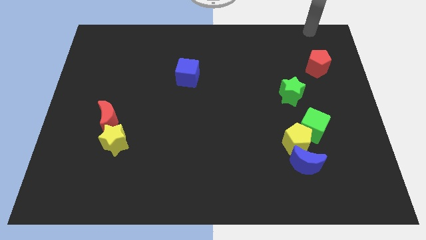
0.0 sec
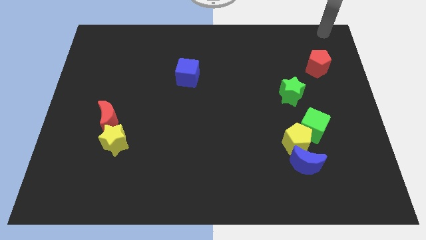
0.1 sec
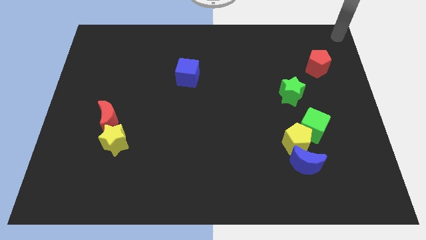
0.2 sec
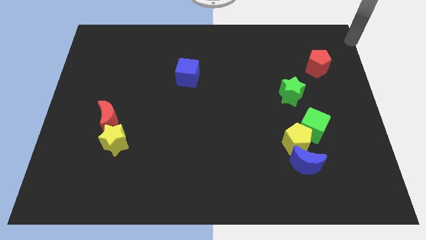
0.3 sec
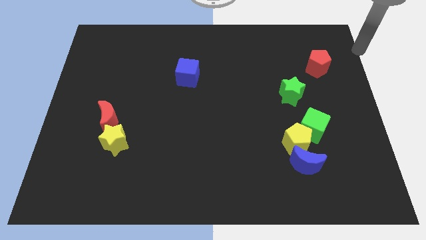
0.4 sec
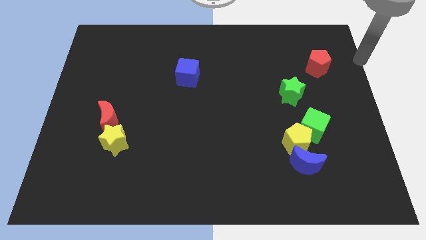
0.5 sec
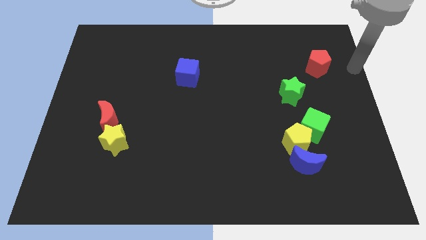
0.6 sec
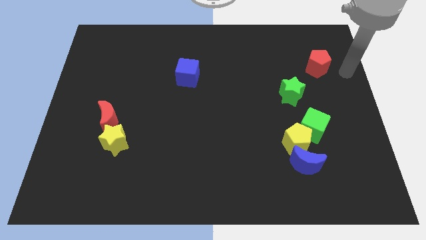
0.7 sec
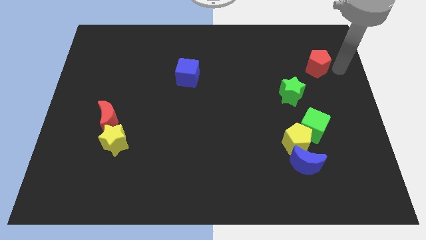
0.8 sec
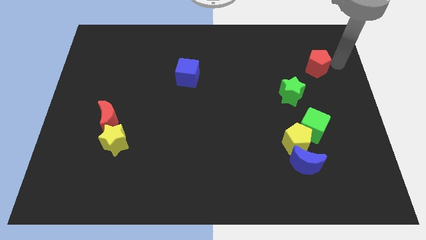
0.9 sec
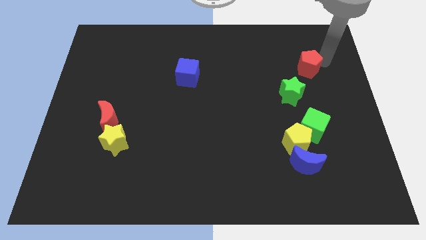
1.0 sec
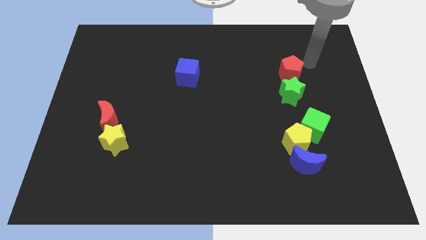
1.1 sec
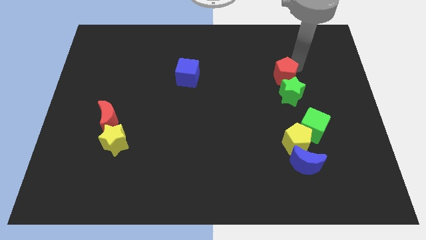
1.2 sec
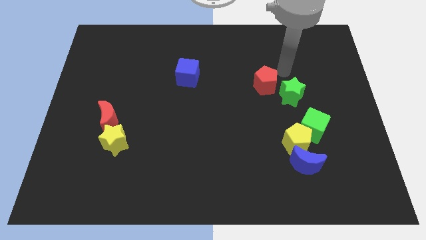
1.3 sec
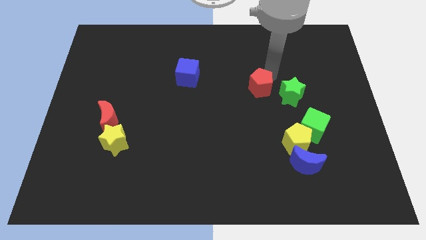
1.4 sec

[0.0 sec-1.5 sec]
place the red pentagon top left to the green star

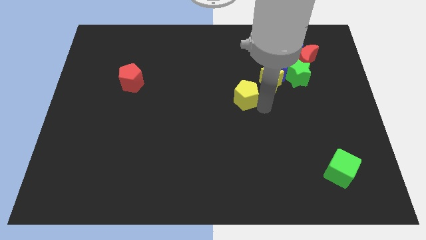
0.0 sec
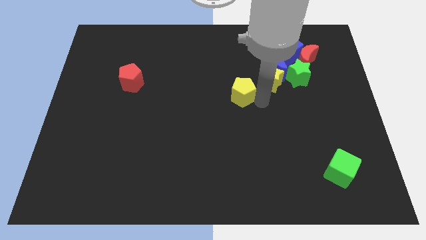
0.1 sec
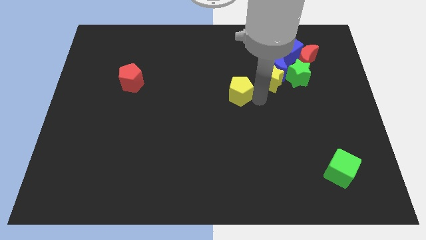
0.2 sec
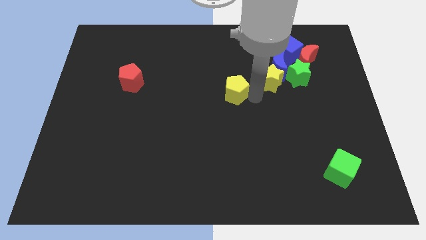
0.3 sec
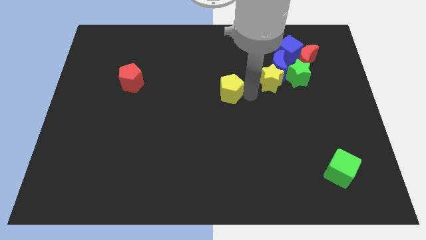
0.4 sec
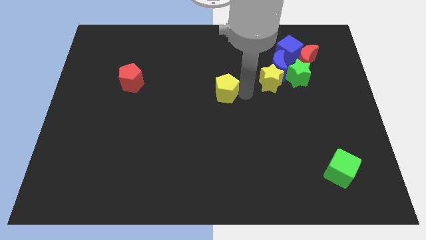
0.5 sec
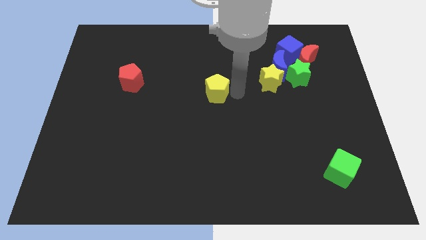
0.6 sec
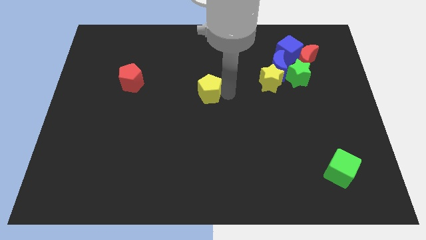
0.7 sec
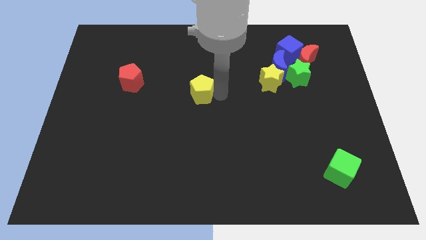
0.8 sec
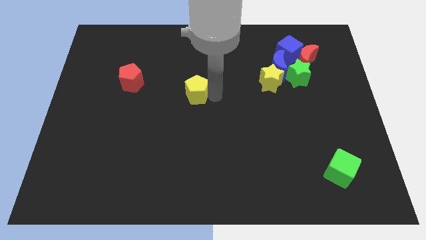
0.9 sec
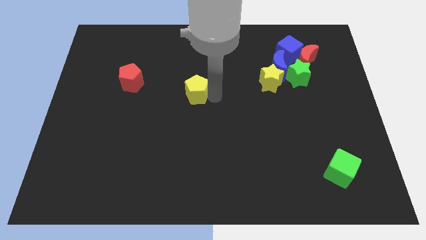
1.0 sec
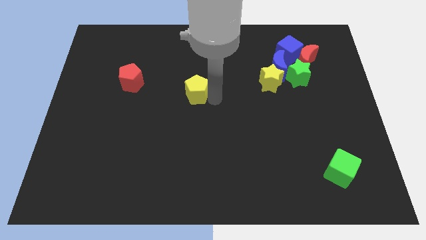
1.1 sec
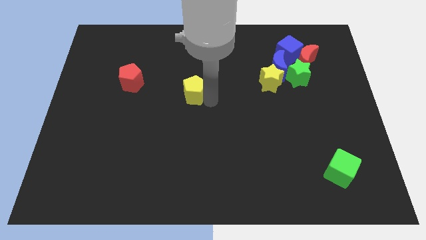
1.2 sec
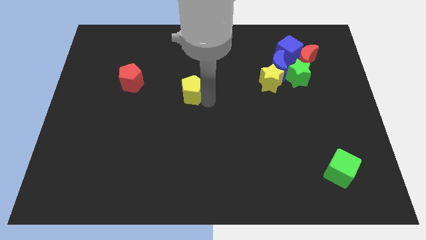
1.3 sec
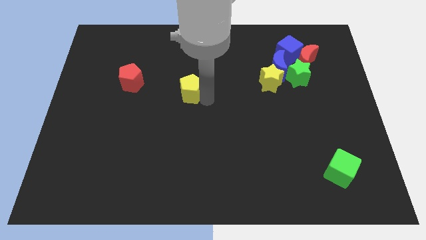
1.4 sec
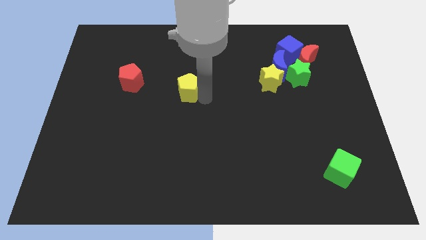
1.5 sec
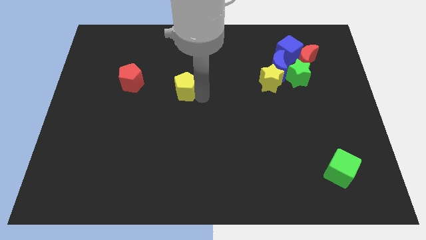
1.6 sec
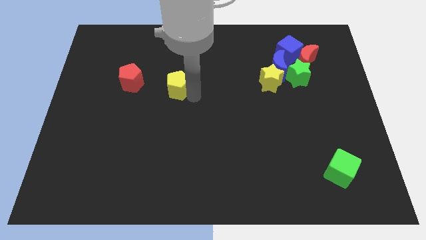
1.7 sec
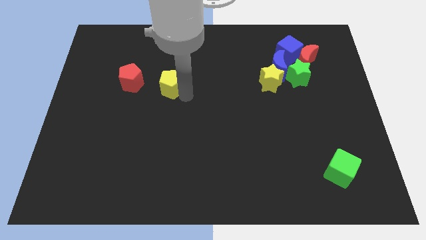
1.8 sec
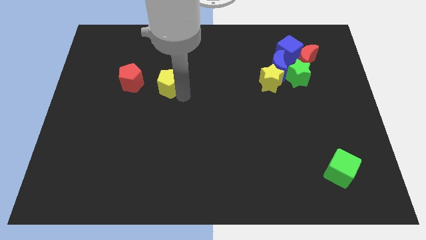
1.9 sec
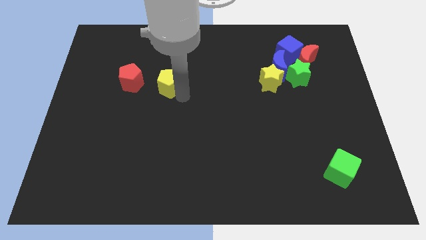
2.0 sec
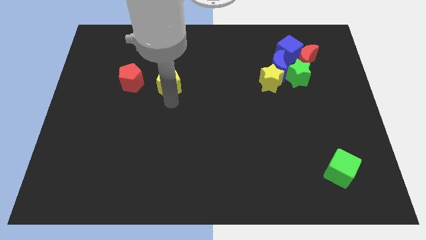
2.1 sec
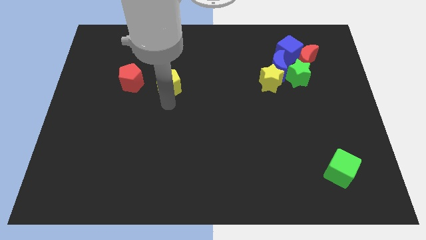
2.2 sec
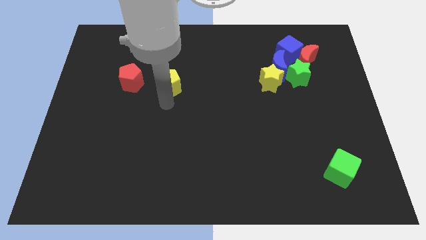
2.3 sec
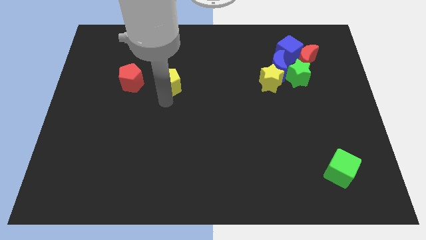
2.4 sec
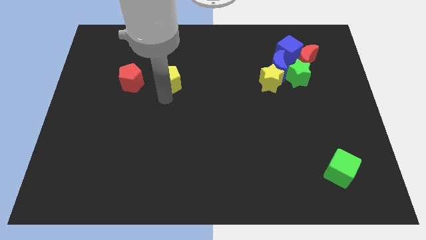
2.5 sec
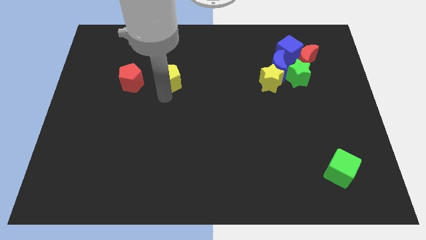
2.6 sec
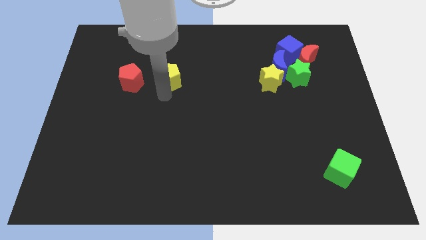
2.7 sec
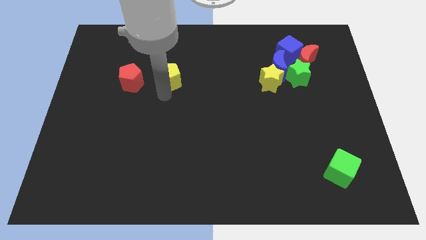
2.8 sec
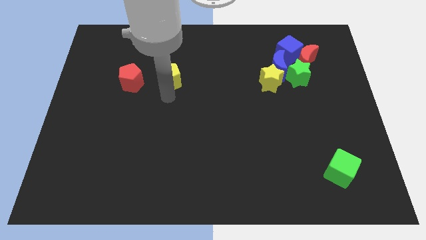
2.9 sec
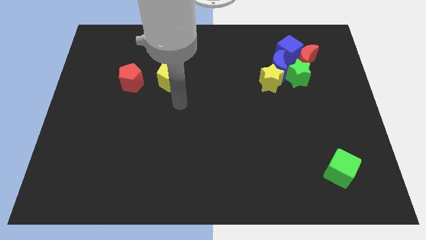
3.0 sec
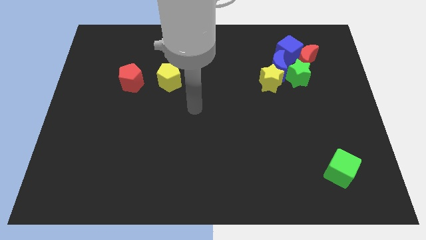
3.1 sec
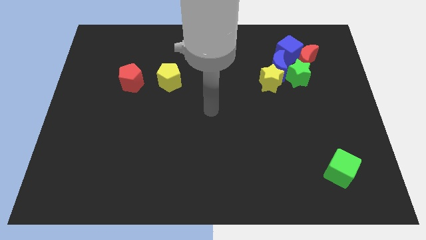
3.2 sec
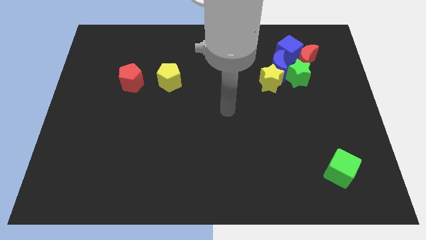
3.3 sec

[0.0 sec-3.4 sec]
push the yellow pentagon to the right of the red pentagon

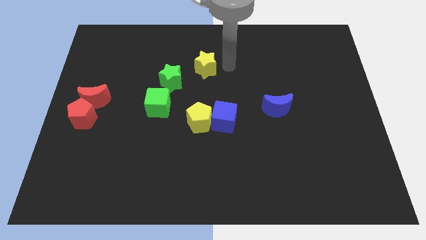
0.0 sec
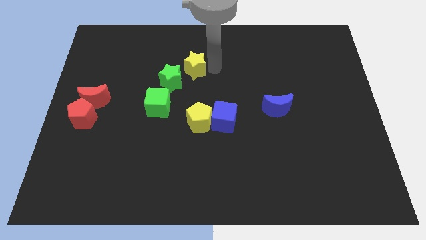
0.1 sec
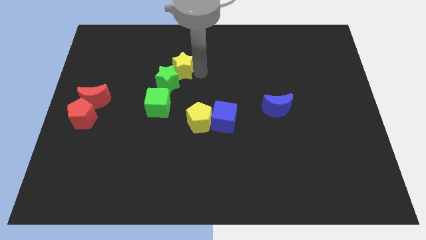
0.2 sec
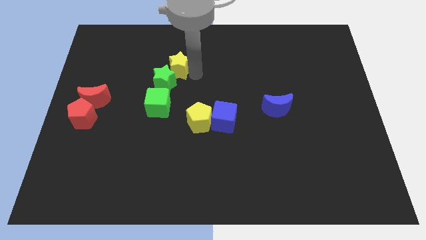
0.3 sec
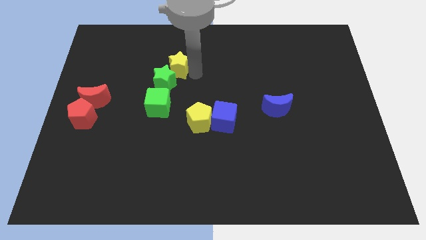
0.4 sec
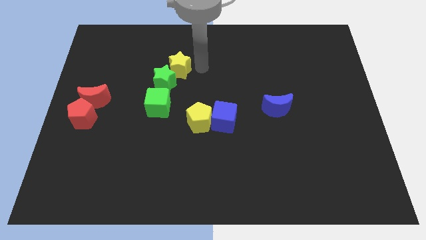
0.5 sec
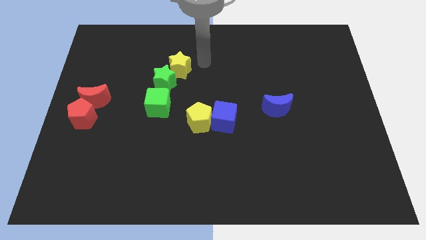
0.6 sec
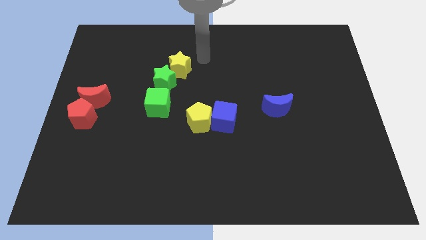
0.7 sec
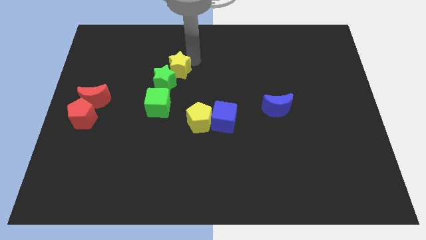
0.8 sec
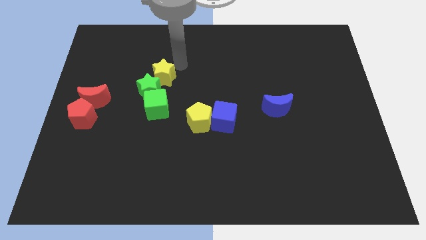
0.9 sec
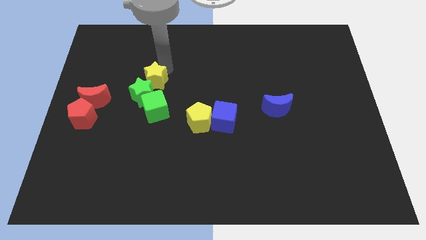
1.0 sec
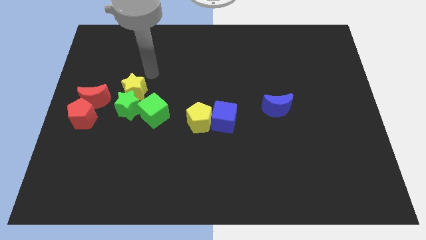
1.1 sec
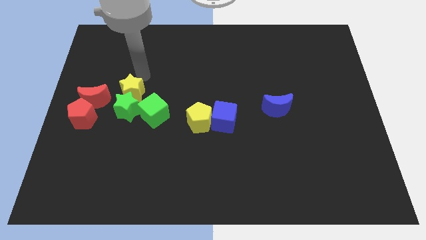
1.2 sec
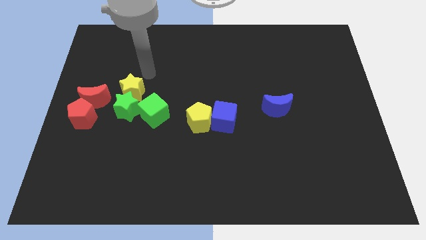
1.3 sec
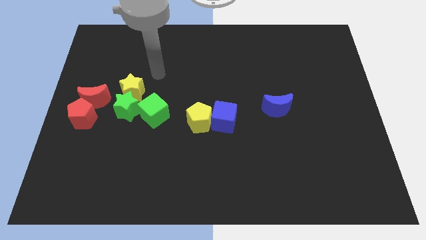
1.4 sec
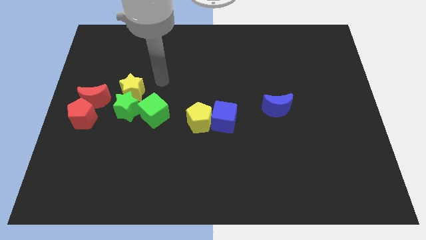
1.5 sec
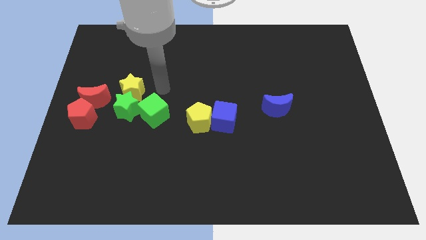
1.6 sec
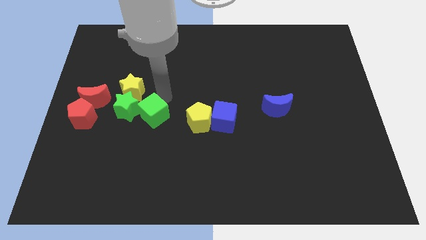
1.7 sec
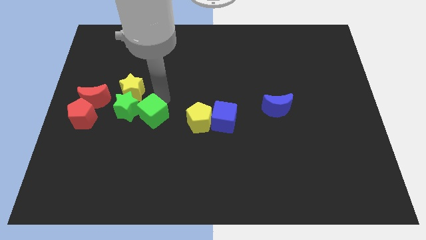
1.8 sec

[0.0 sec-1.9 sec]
push the yellow star into the green star

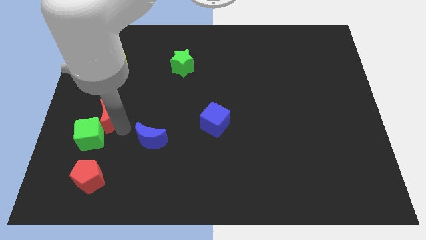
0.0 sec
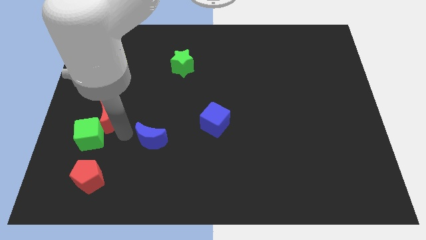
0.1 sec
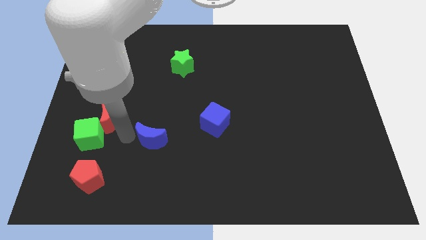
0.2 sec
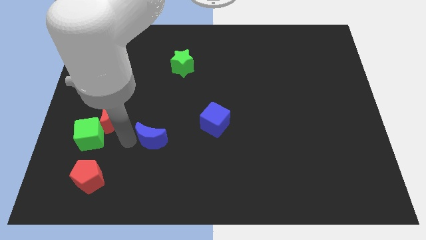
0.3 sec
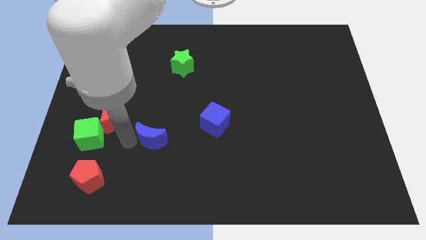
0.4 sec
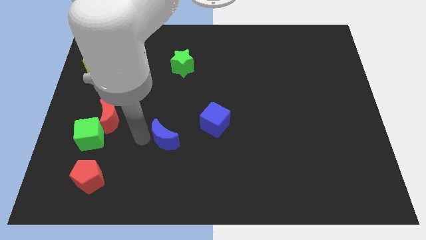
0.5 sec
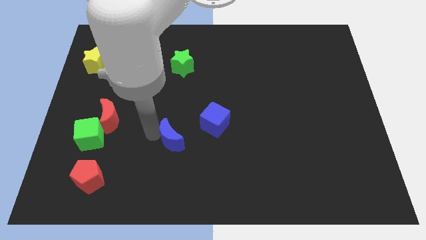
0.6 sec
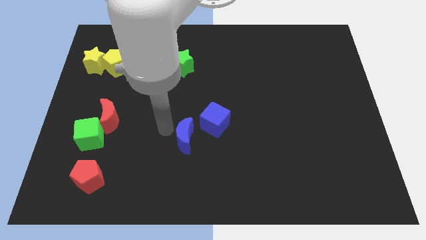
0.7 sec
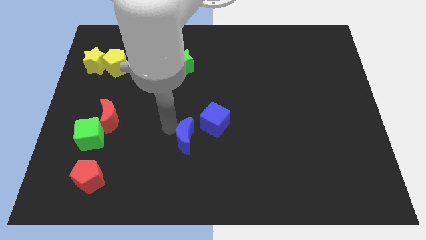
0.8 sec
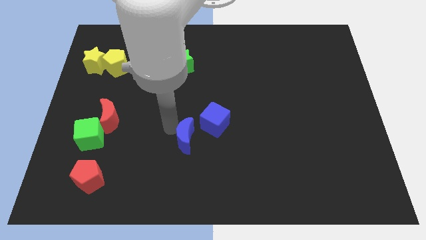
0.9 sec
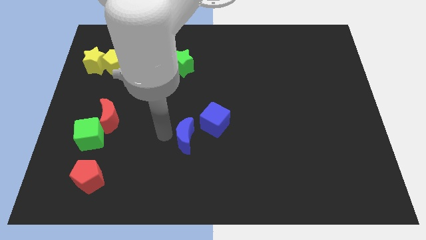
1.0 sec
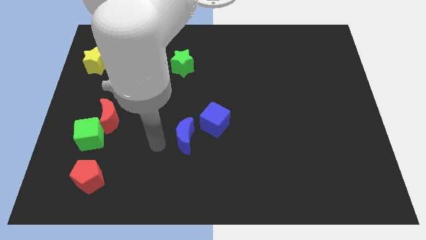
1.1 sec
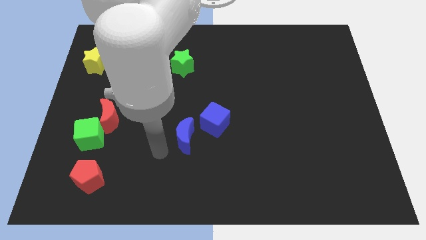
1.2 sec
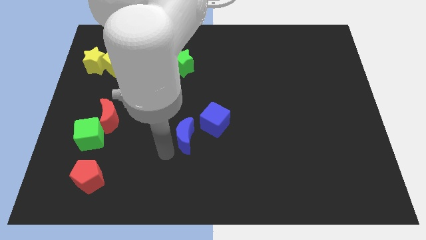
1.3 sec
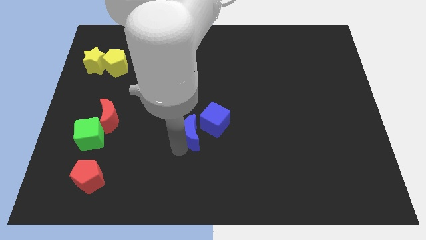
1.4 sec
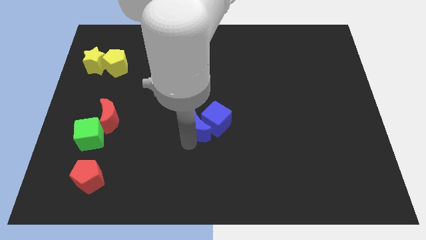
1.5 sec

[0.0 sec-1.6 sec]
move the blue crescent to the center of the board

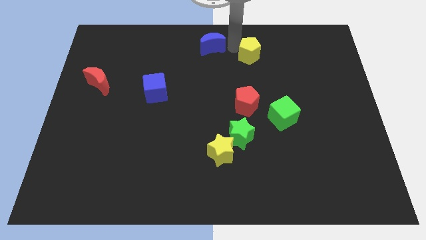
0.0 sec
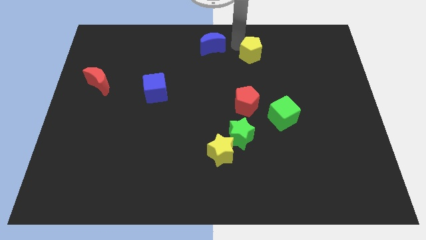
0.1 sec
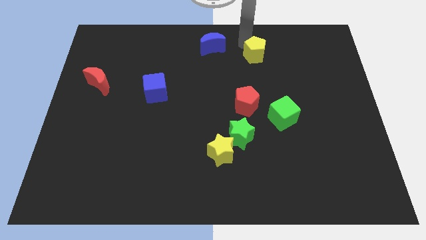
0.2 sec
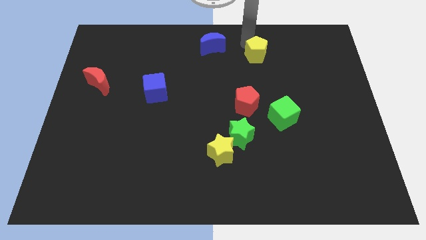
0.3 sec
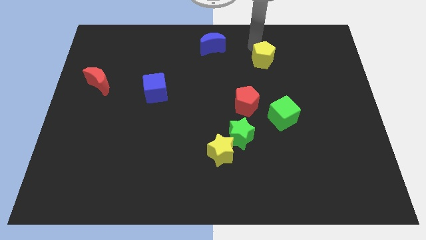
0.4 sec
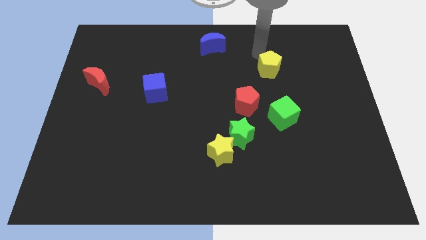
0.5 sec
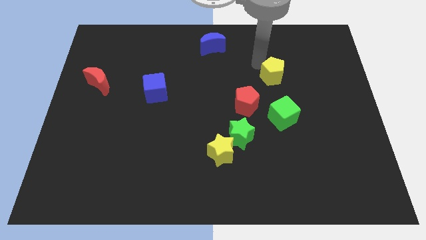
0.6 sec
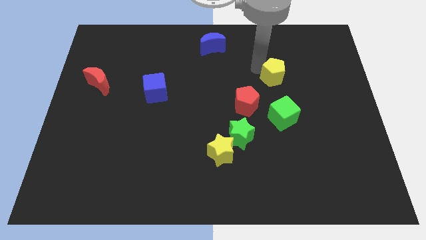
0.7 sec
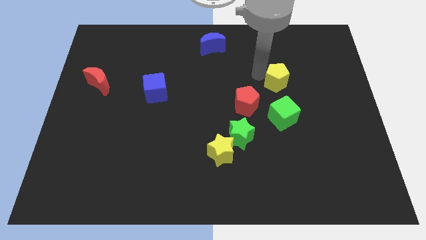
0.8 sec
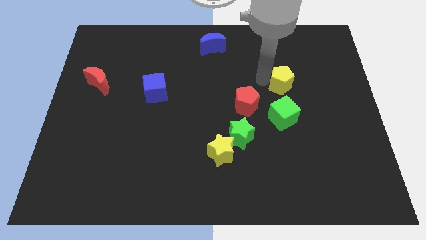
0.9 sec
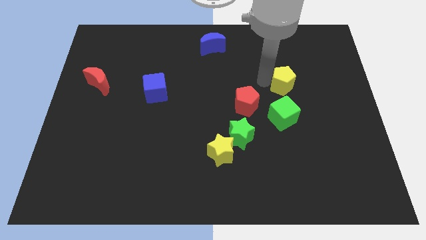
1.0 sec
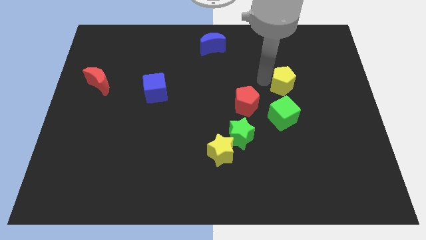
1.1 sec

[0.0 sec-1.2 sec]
push yellow pentagon above green cube
